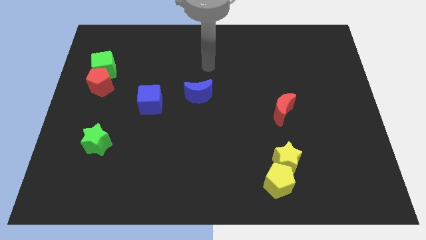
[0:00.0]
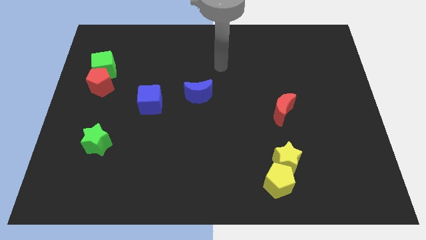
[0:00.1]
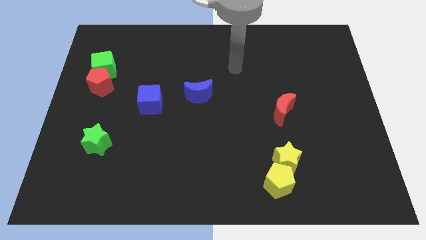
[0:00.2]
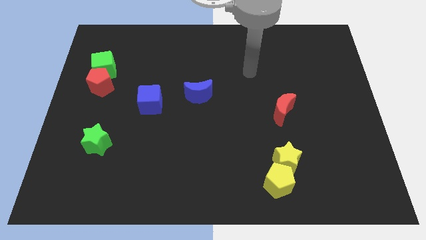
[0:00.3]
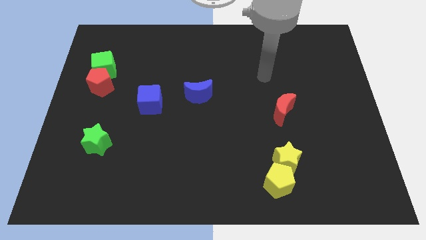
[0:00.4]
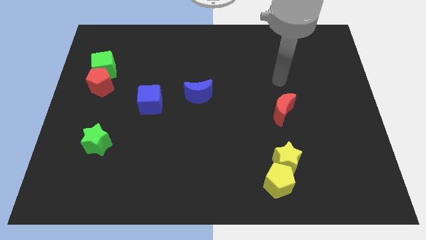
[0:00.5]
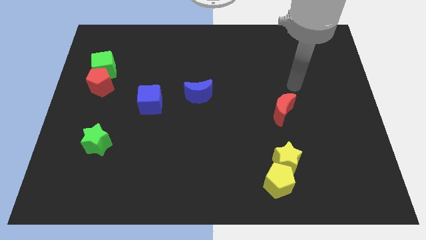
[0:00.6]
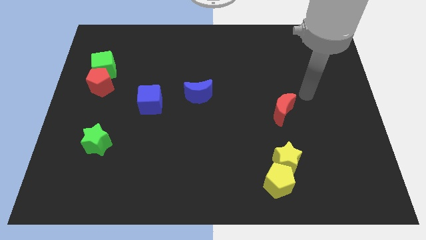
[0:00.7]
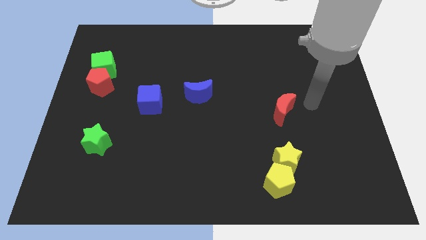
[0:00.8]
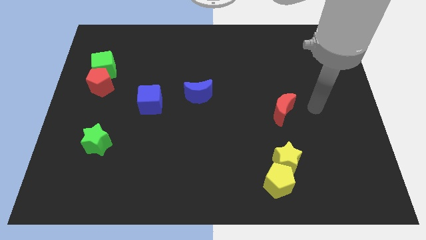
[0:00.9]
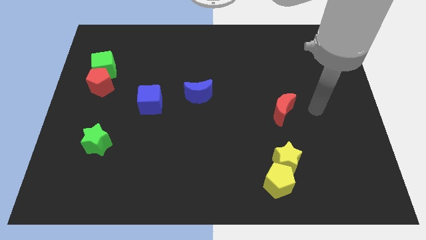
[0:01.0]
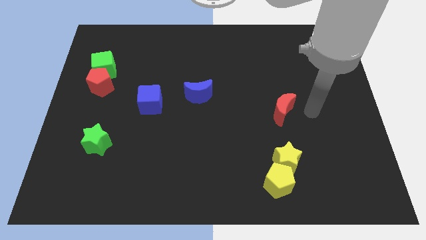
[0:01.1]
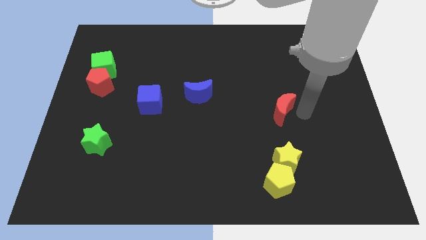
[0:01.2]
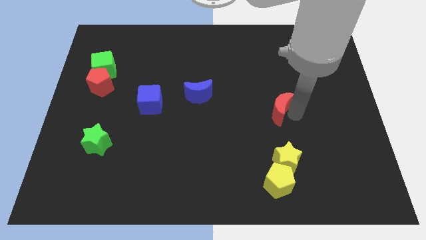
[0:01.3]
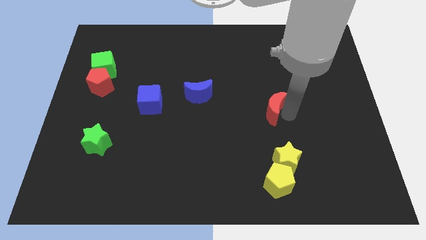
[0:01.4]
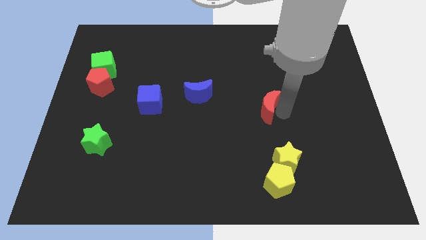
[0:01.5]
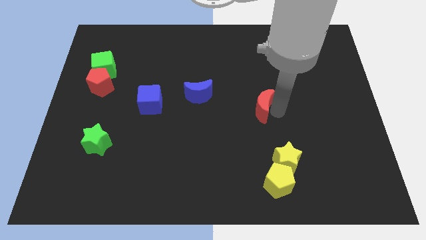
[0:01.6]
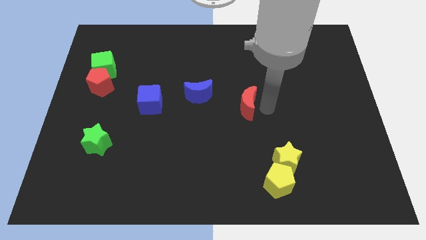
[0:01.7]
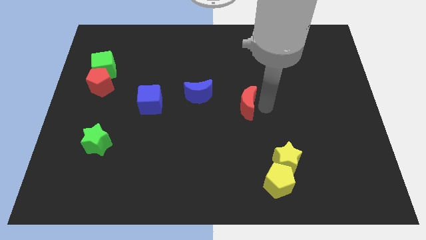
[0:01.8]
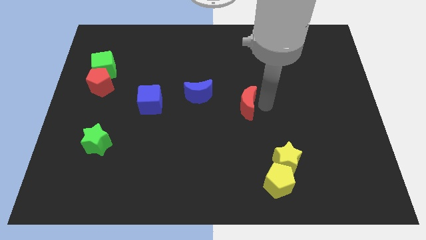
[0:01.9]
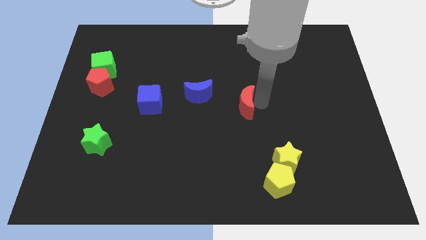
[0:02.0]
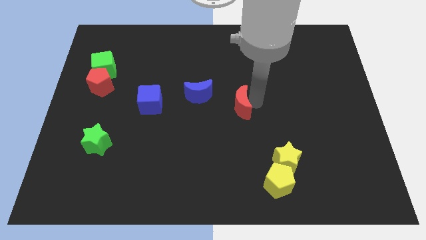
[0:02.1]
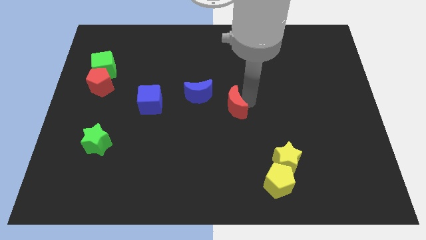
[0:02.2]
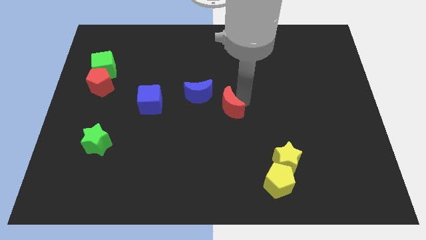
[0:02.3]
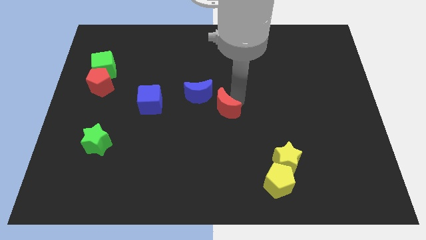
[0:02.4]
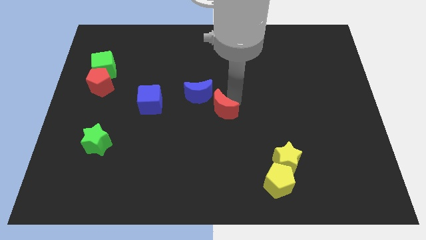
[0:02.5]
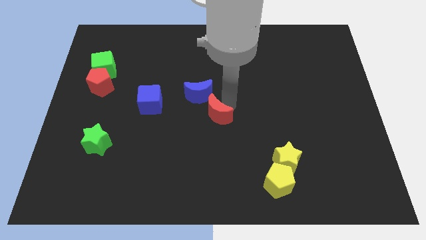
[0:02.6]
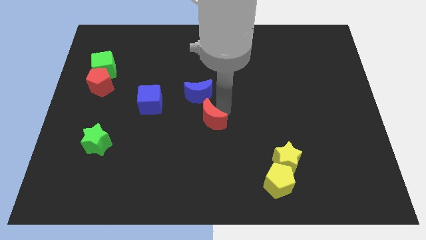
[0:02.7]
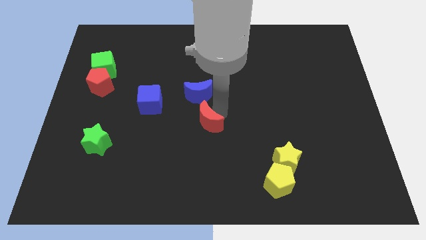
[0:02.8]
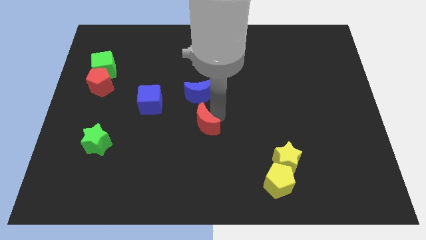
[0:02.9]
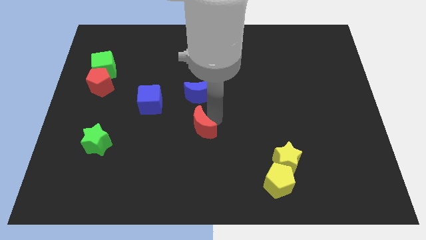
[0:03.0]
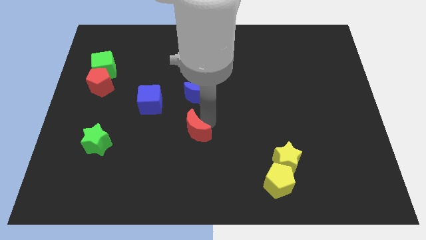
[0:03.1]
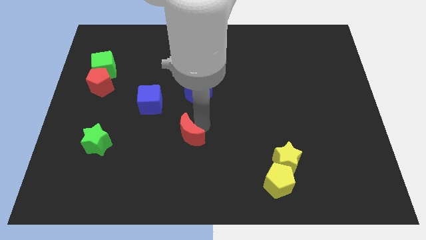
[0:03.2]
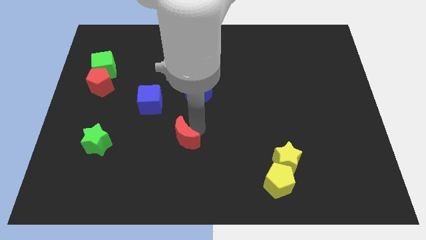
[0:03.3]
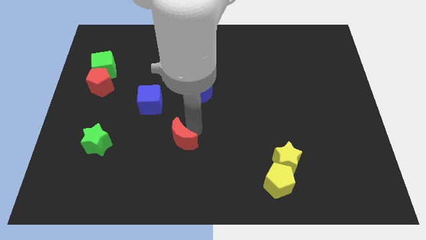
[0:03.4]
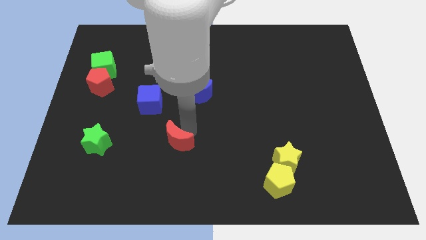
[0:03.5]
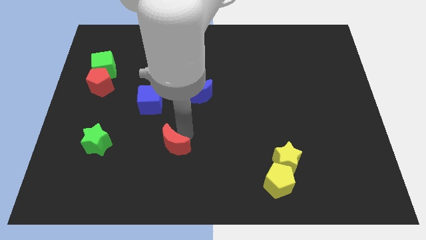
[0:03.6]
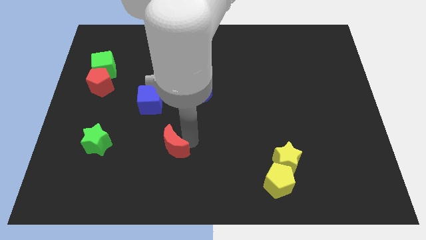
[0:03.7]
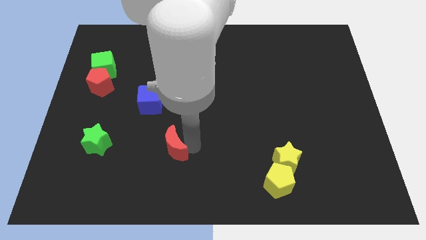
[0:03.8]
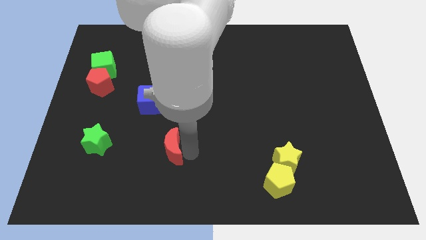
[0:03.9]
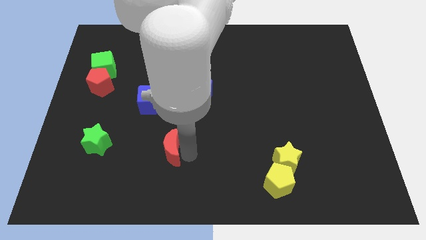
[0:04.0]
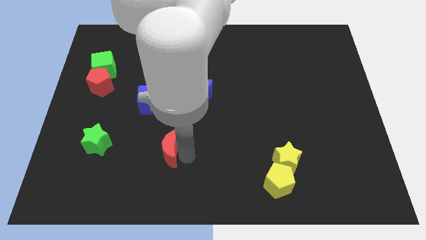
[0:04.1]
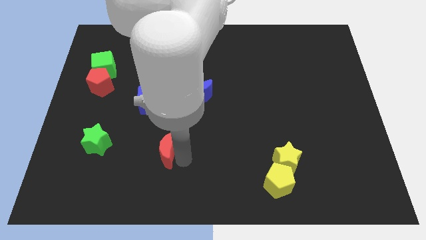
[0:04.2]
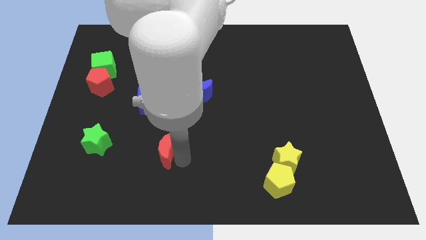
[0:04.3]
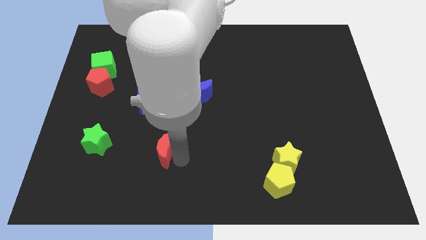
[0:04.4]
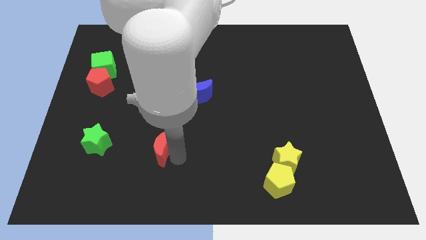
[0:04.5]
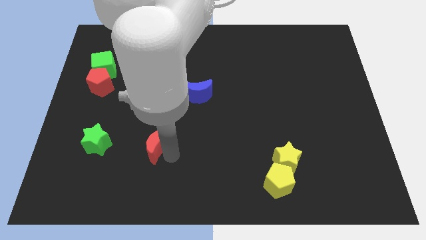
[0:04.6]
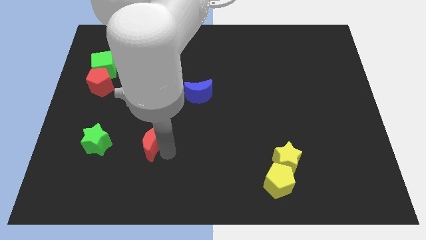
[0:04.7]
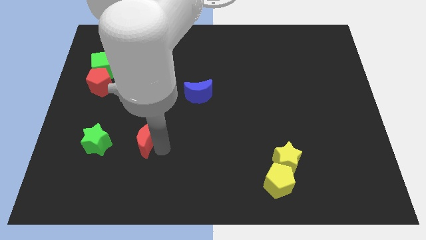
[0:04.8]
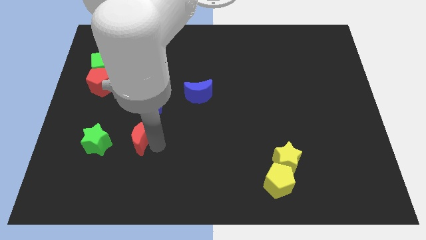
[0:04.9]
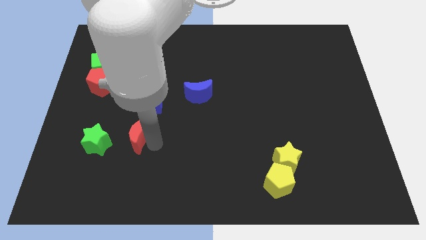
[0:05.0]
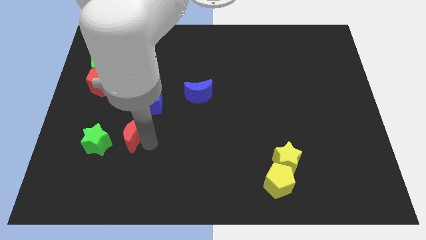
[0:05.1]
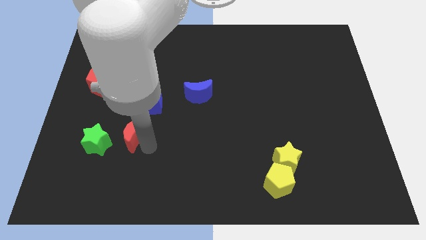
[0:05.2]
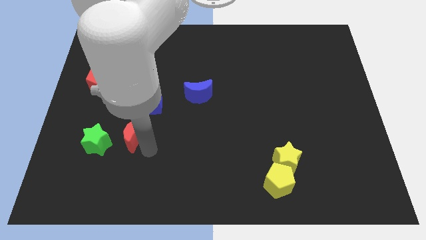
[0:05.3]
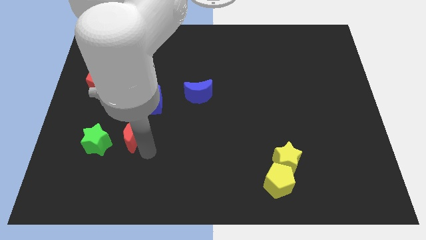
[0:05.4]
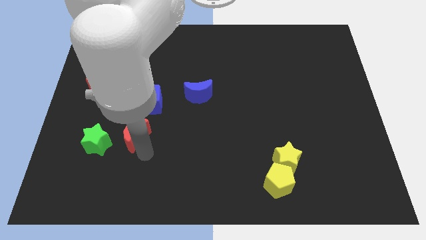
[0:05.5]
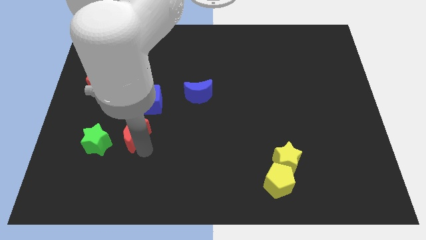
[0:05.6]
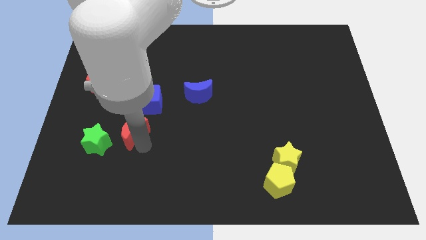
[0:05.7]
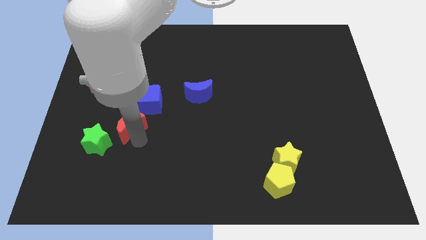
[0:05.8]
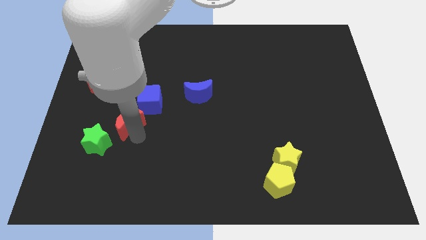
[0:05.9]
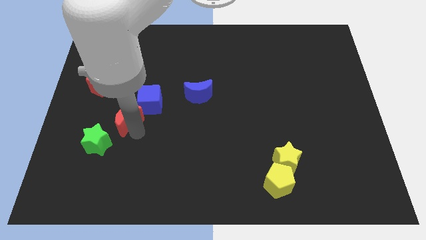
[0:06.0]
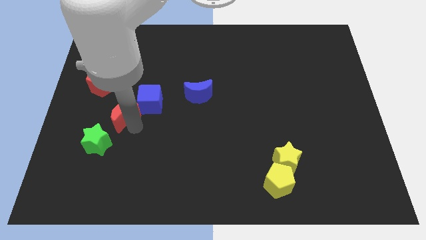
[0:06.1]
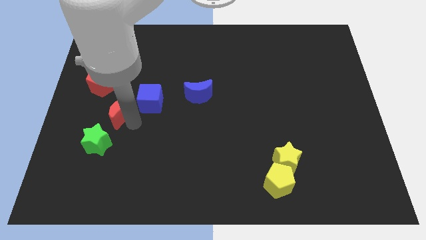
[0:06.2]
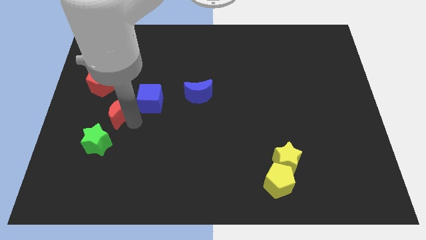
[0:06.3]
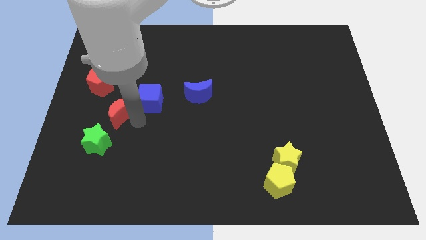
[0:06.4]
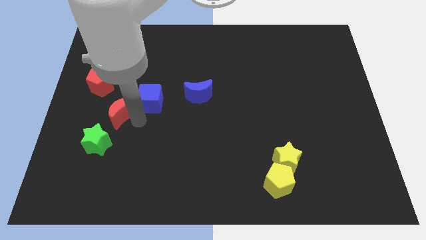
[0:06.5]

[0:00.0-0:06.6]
move the red crescent to the left bottom side of the blue cube

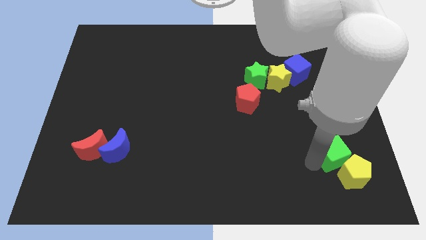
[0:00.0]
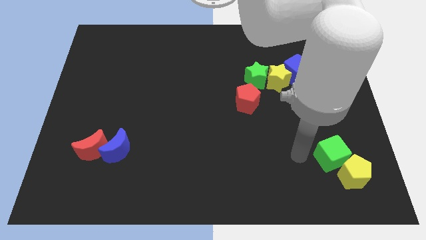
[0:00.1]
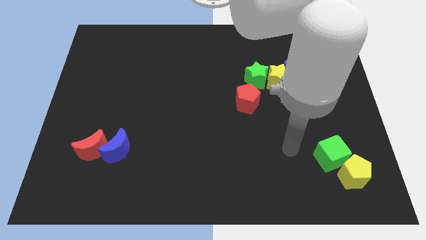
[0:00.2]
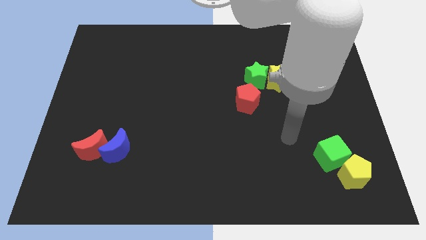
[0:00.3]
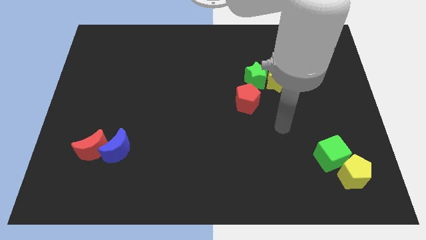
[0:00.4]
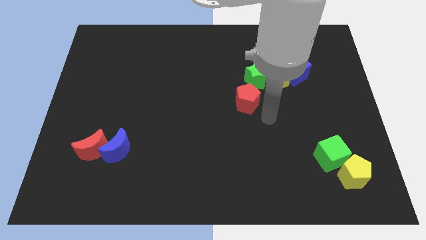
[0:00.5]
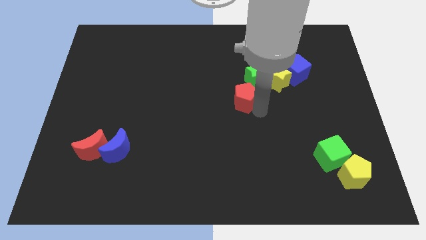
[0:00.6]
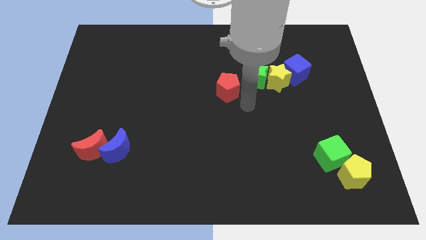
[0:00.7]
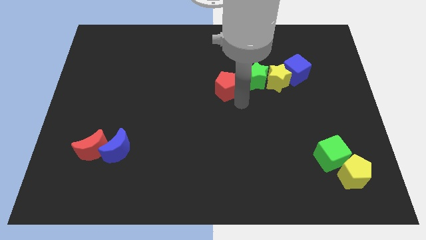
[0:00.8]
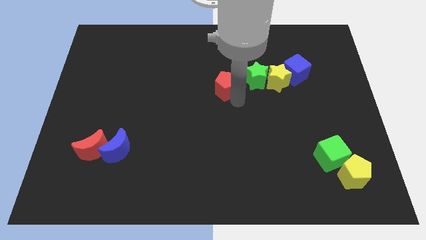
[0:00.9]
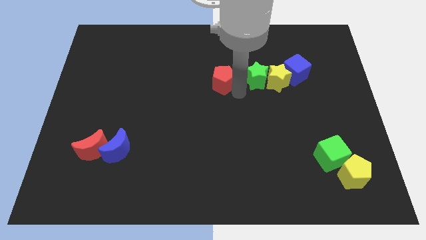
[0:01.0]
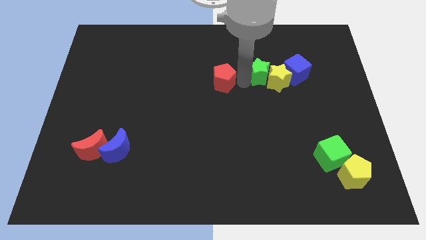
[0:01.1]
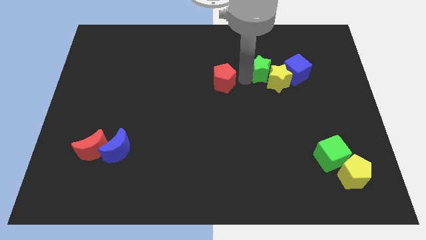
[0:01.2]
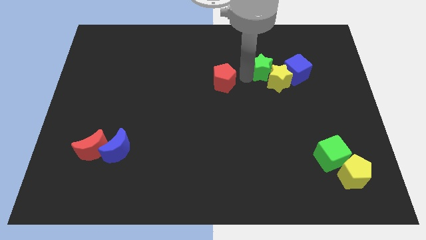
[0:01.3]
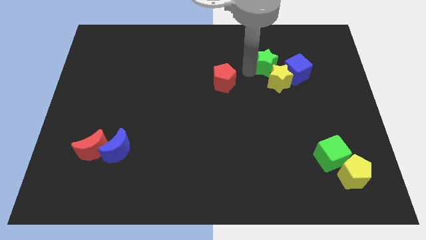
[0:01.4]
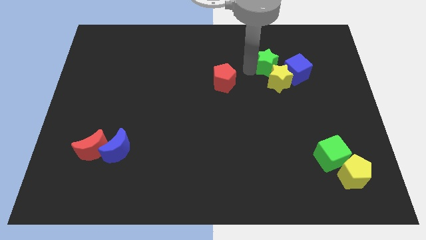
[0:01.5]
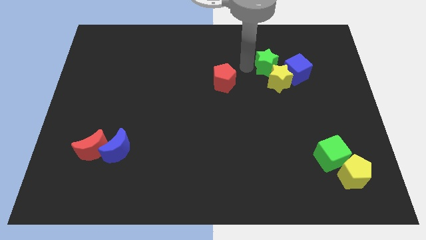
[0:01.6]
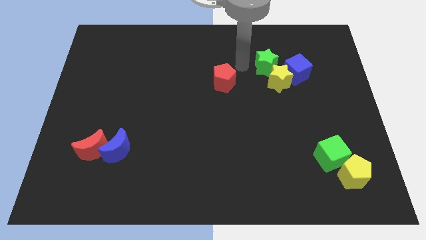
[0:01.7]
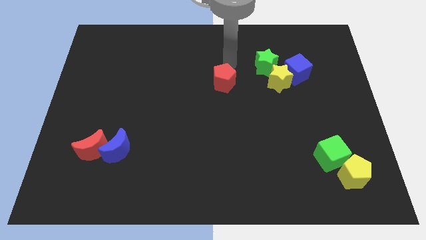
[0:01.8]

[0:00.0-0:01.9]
separate the red pentagon from group of blocks

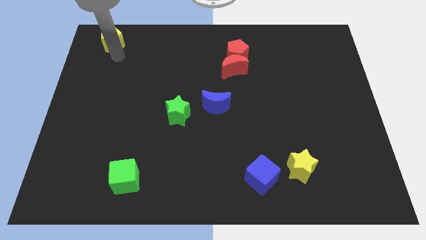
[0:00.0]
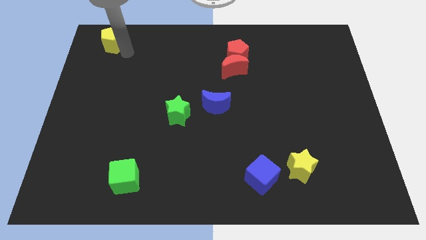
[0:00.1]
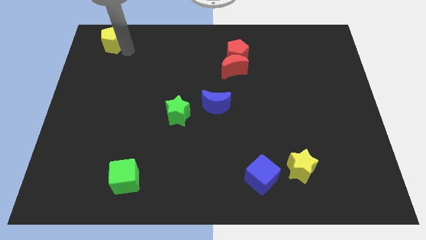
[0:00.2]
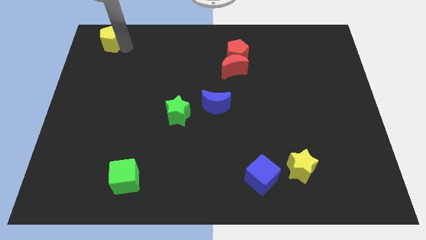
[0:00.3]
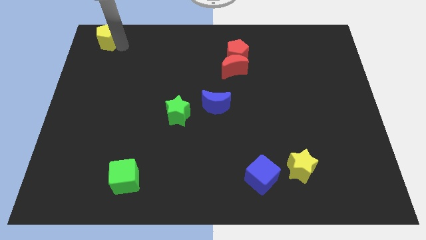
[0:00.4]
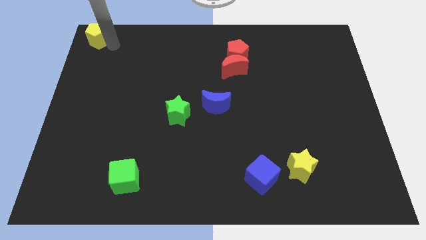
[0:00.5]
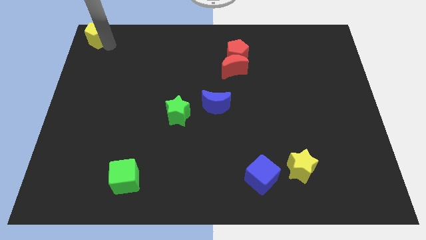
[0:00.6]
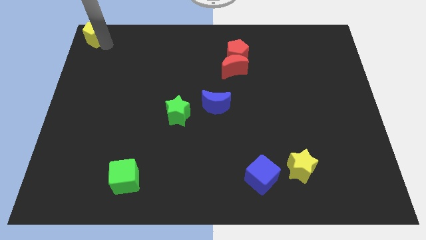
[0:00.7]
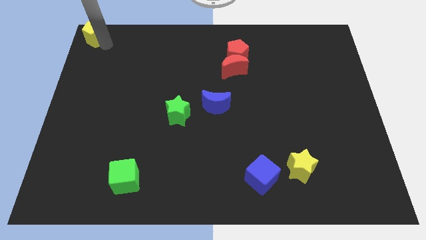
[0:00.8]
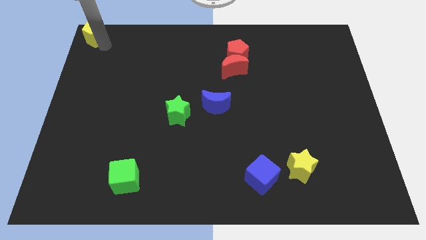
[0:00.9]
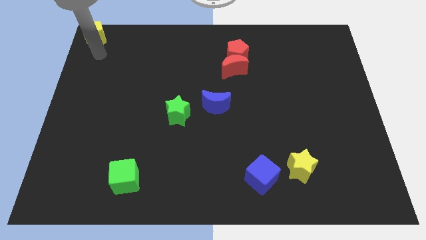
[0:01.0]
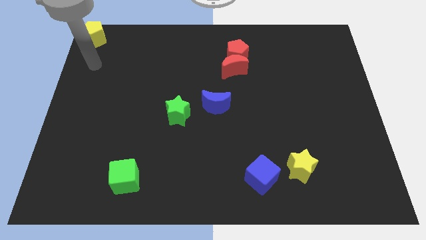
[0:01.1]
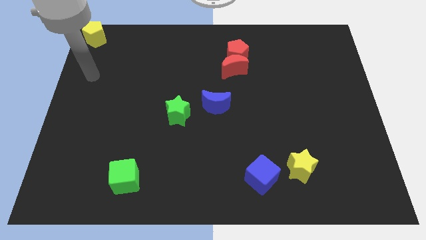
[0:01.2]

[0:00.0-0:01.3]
push the yellow pentagon to the top left corner
